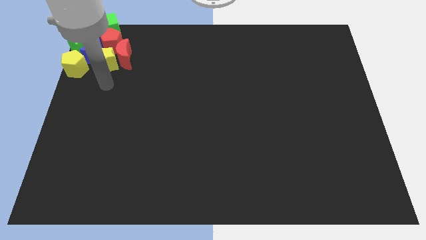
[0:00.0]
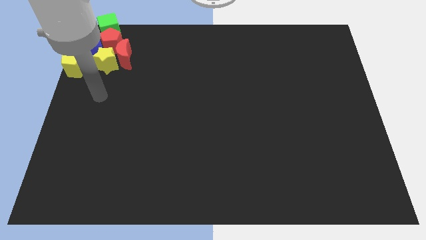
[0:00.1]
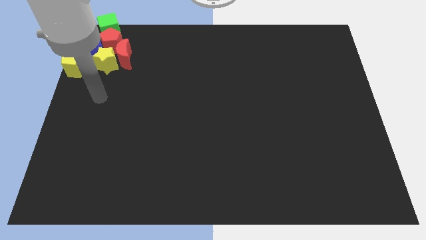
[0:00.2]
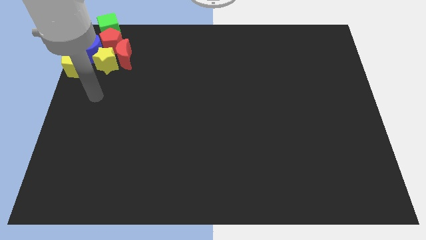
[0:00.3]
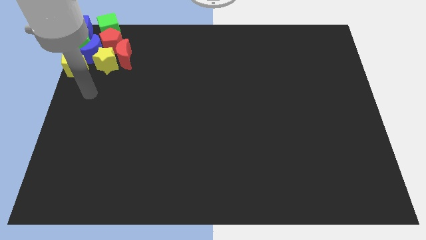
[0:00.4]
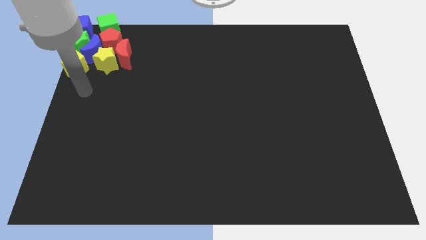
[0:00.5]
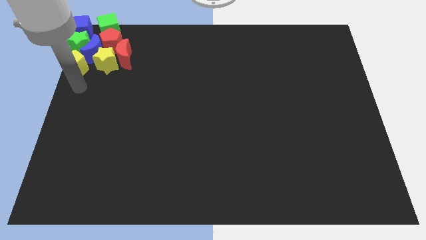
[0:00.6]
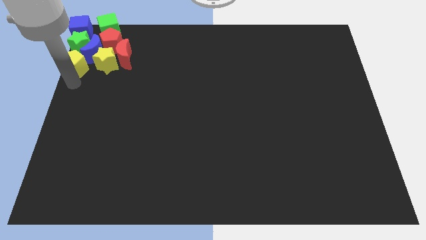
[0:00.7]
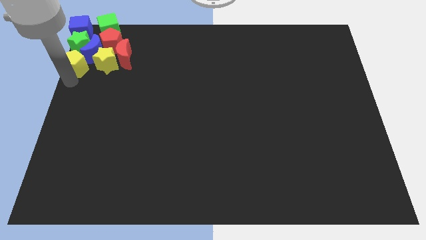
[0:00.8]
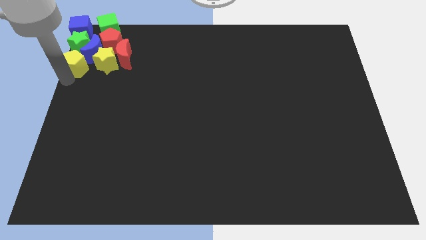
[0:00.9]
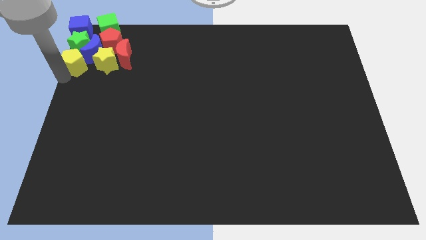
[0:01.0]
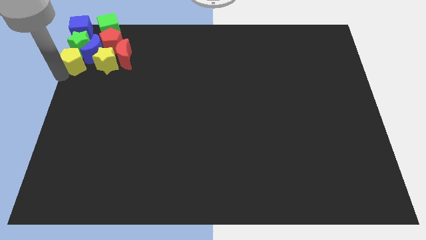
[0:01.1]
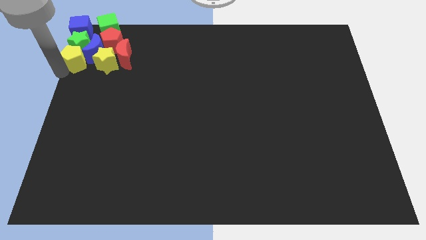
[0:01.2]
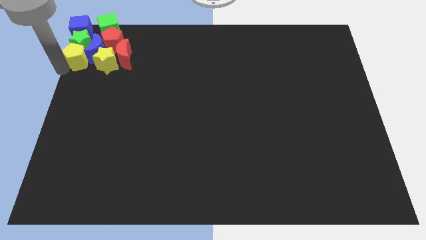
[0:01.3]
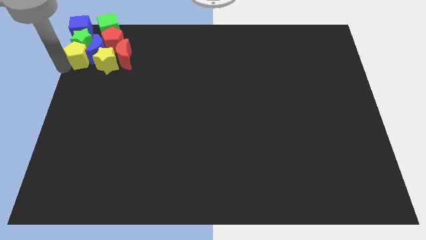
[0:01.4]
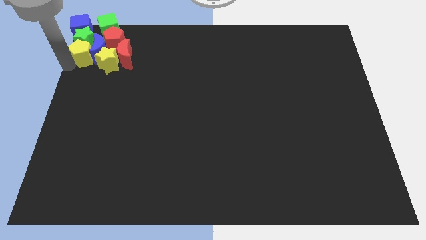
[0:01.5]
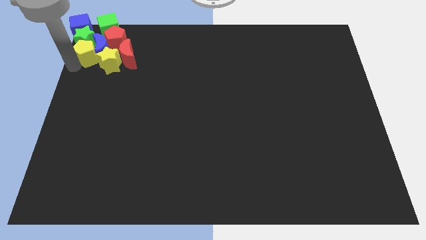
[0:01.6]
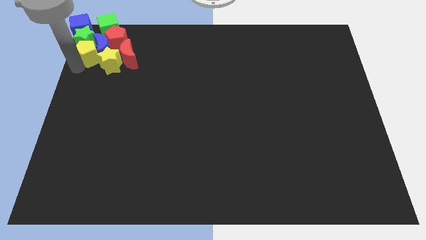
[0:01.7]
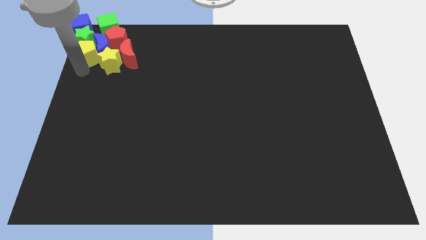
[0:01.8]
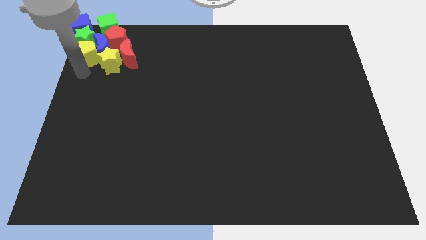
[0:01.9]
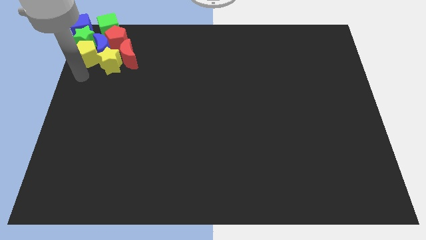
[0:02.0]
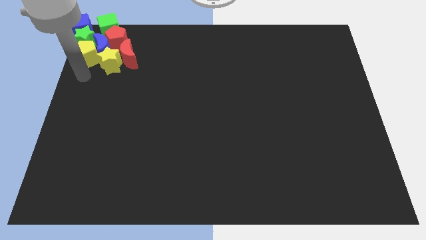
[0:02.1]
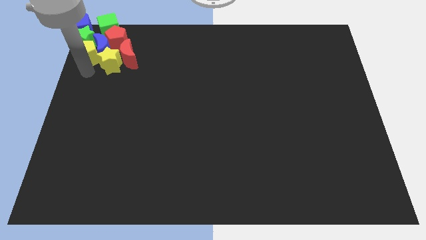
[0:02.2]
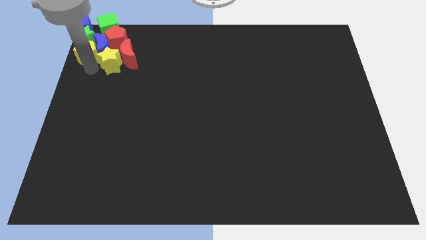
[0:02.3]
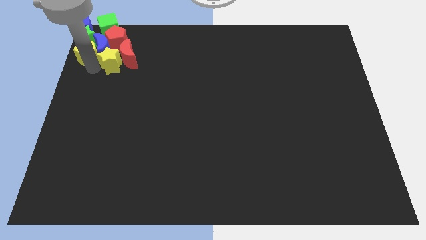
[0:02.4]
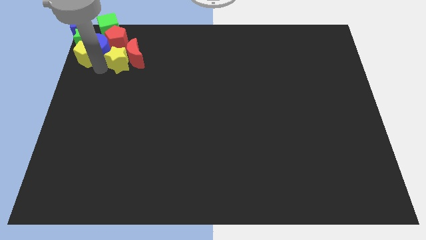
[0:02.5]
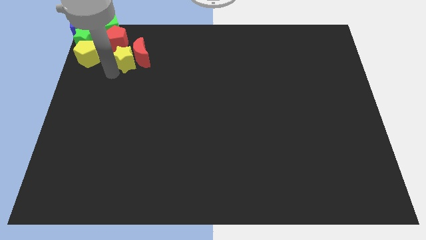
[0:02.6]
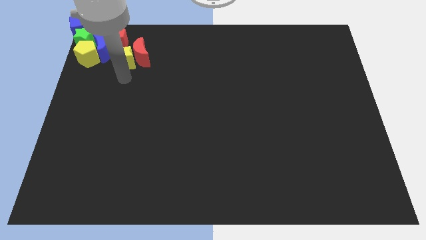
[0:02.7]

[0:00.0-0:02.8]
separate the yellow star and red moon from a group of blocks

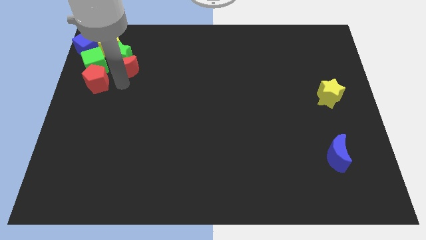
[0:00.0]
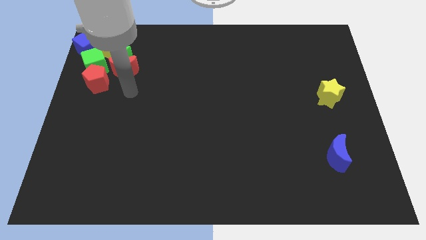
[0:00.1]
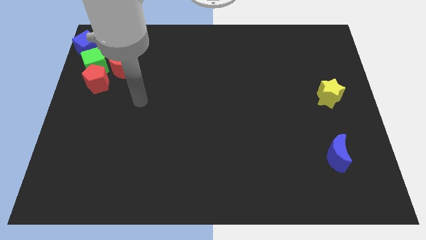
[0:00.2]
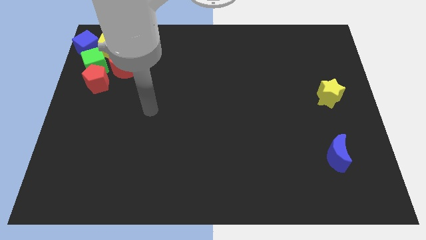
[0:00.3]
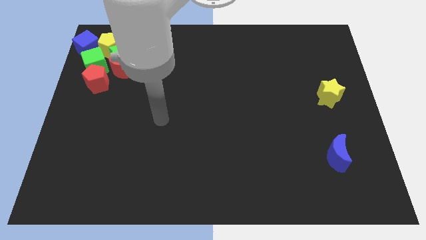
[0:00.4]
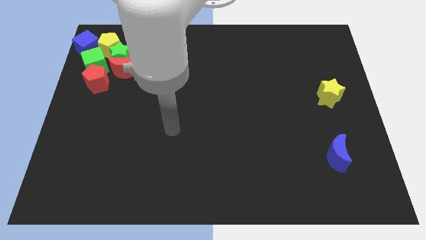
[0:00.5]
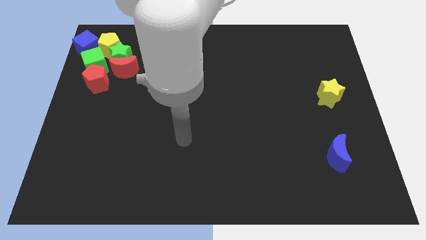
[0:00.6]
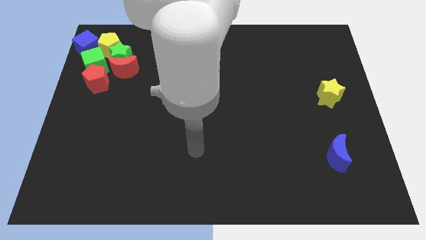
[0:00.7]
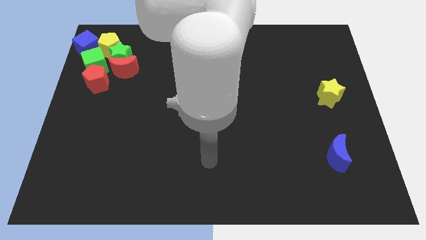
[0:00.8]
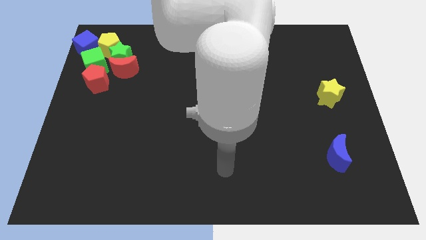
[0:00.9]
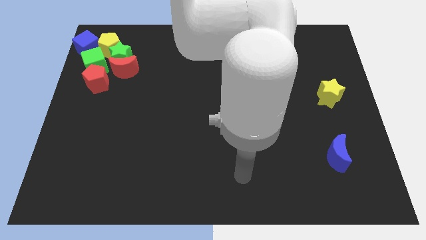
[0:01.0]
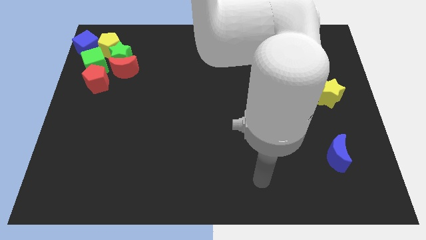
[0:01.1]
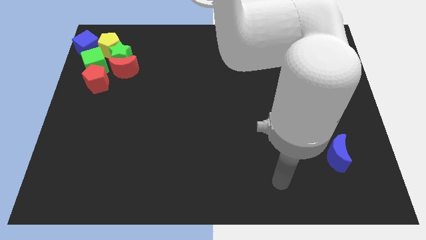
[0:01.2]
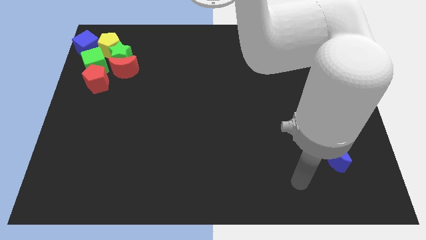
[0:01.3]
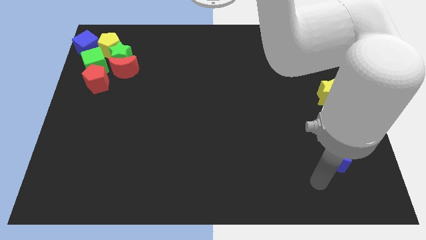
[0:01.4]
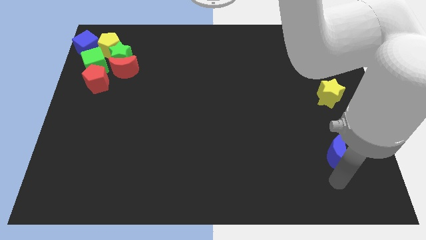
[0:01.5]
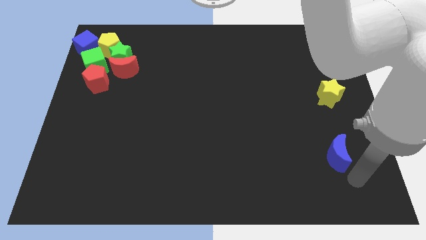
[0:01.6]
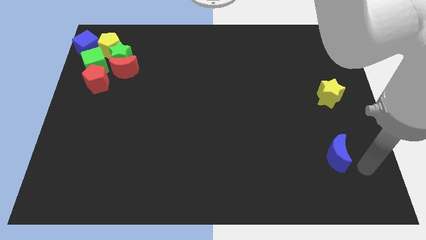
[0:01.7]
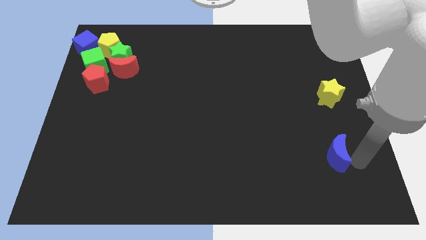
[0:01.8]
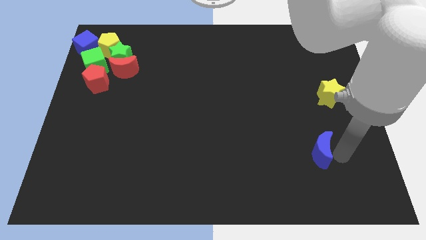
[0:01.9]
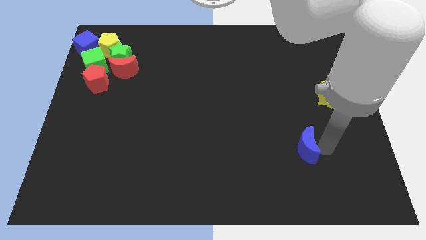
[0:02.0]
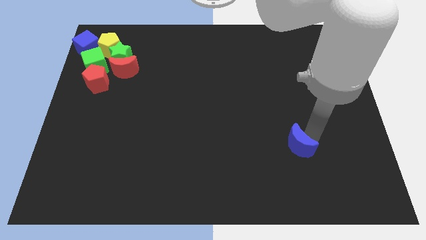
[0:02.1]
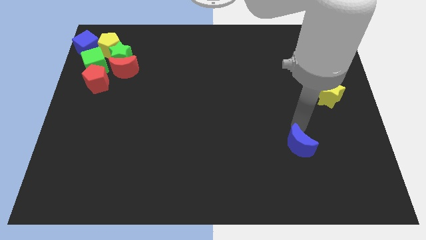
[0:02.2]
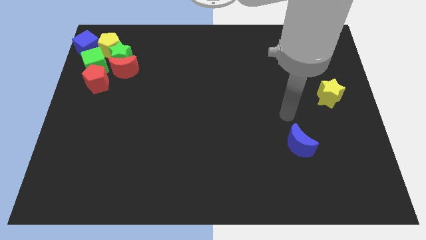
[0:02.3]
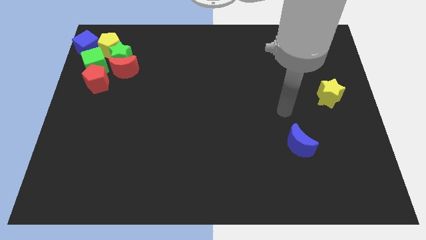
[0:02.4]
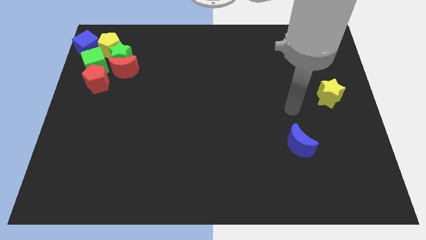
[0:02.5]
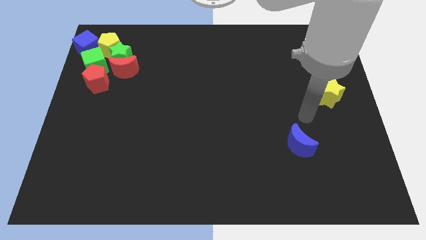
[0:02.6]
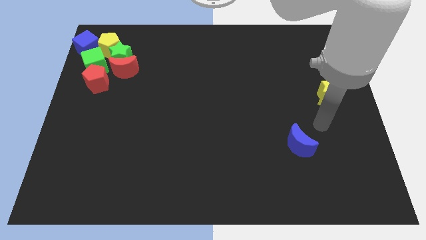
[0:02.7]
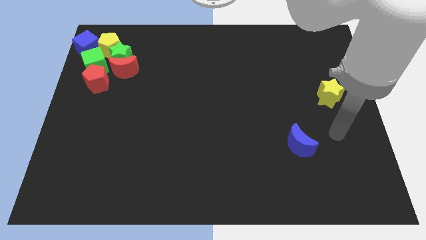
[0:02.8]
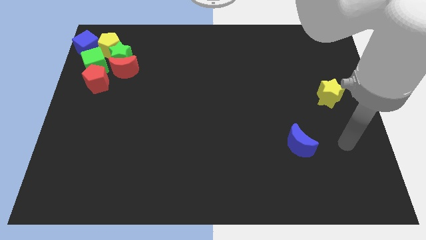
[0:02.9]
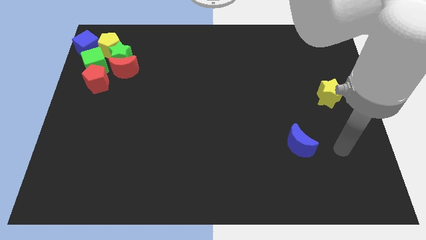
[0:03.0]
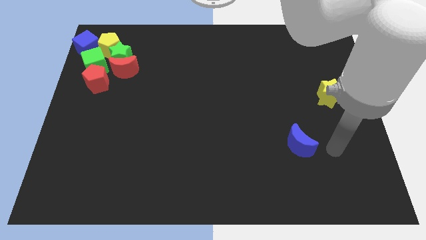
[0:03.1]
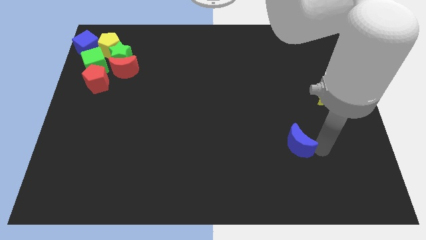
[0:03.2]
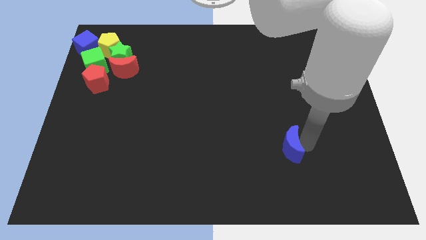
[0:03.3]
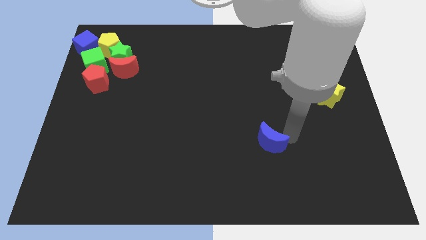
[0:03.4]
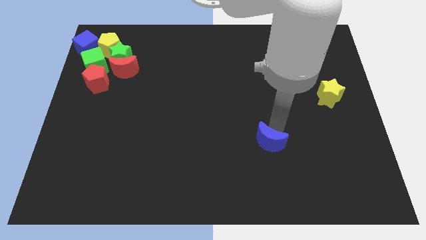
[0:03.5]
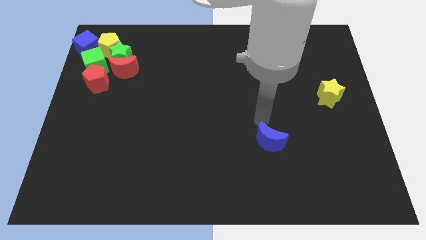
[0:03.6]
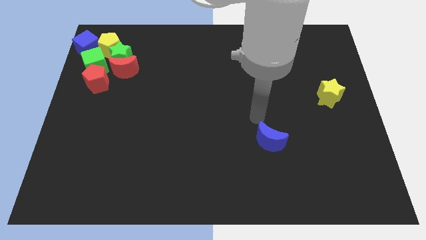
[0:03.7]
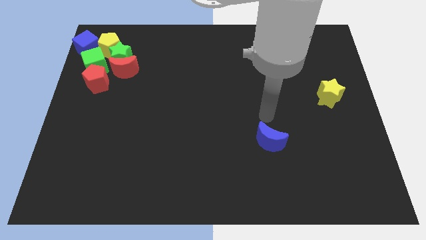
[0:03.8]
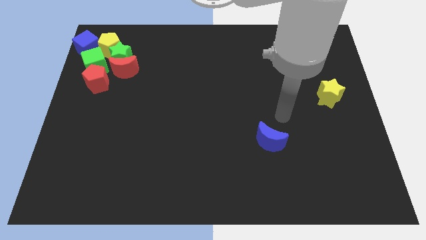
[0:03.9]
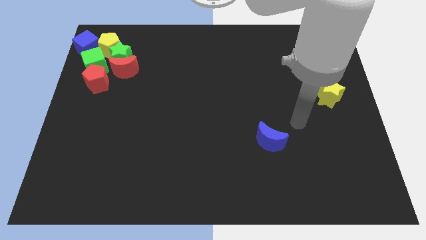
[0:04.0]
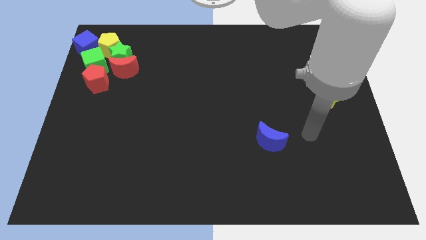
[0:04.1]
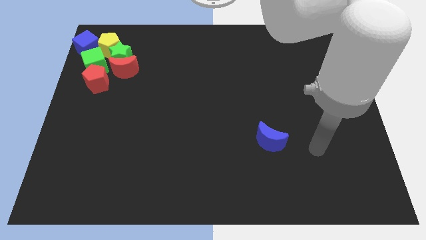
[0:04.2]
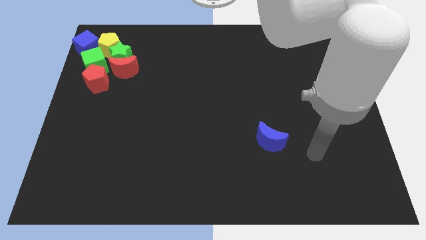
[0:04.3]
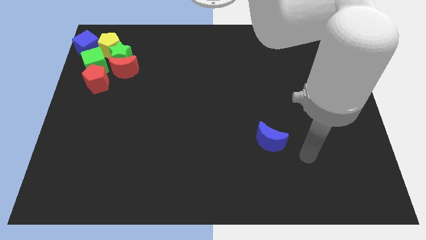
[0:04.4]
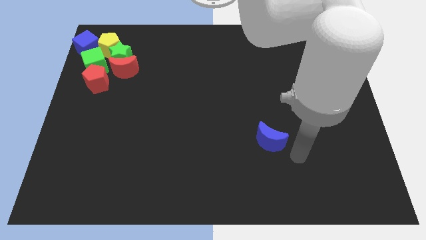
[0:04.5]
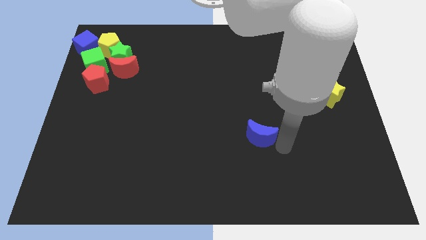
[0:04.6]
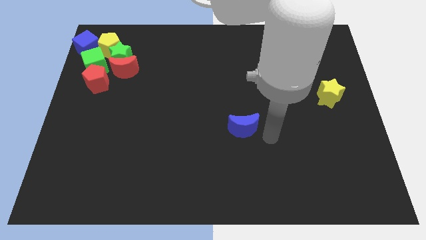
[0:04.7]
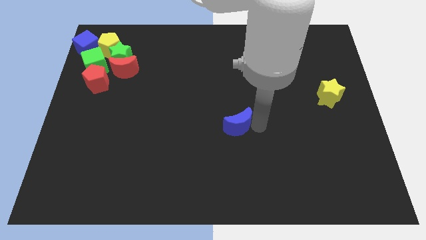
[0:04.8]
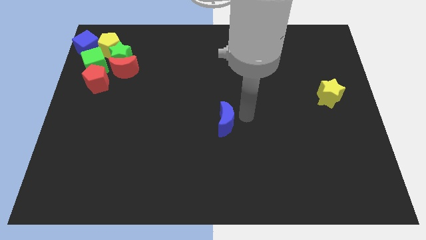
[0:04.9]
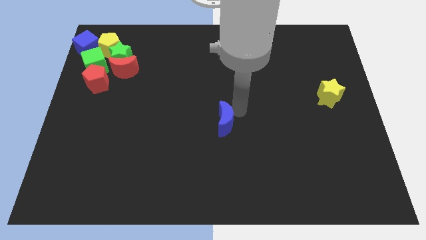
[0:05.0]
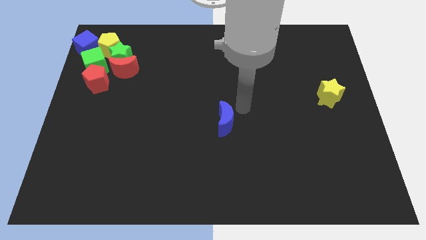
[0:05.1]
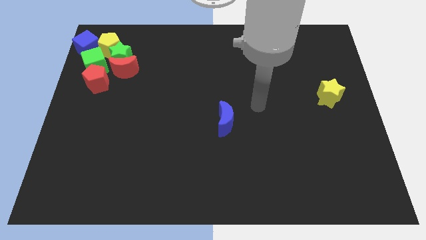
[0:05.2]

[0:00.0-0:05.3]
place the blue crescent at the center of the table

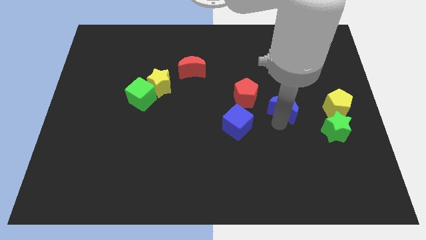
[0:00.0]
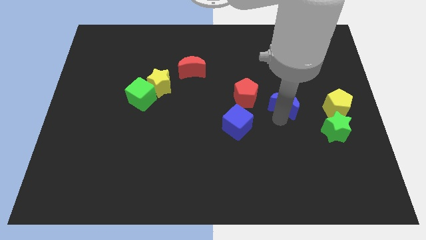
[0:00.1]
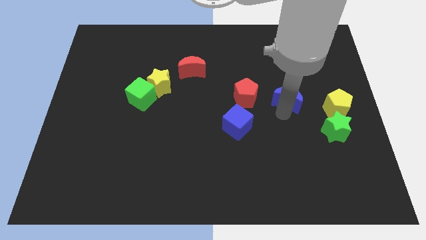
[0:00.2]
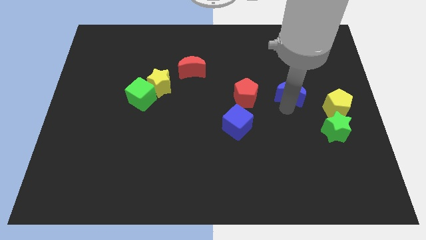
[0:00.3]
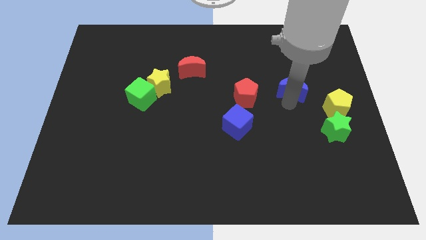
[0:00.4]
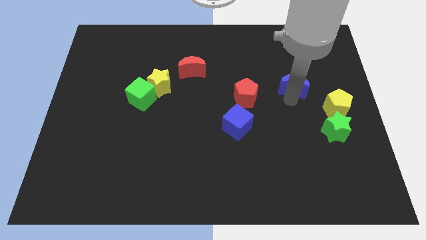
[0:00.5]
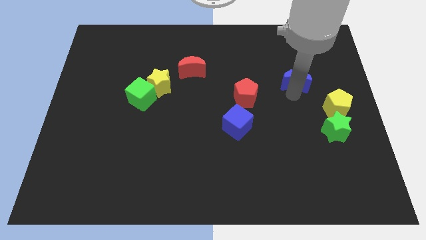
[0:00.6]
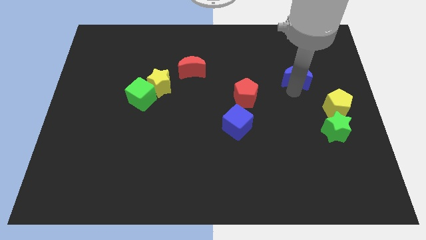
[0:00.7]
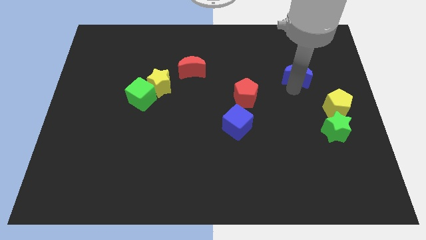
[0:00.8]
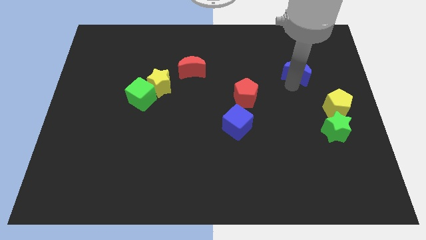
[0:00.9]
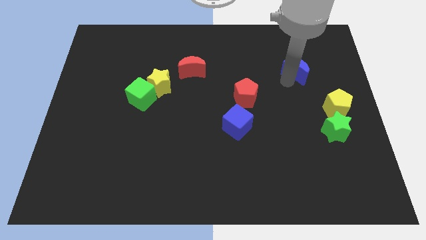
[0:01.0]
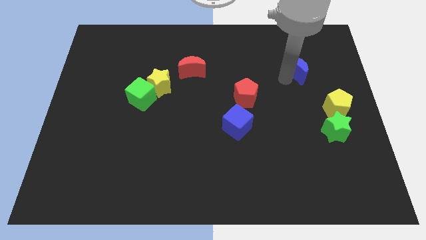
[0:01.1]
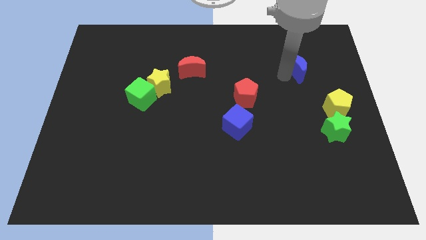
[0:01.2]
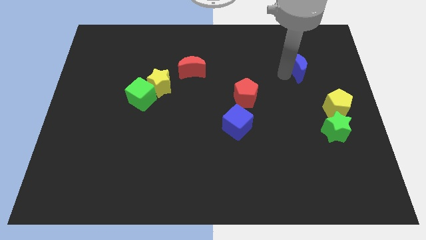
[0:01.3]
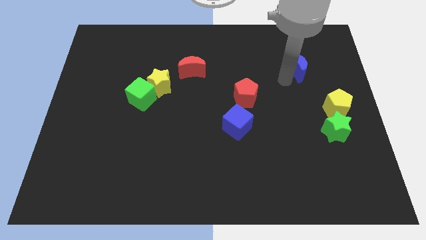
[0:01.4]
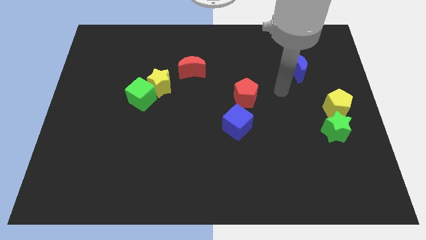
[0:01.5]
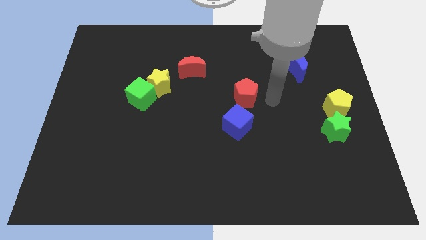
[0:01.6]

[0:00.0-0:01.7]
place the blue crescent diagonally right of the red crescent
